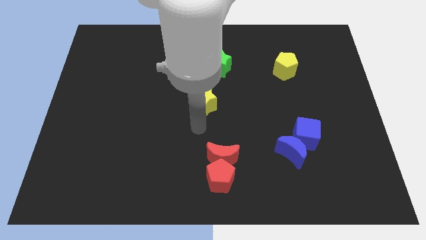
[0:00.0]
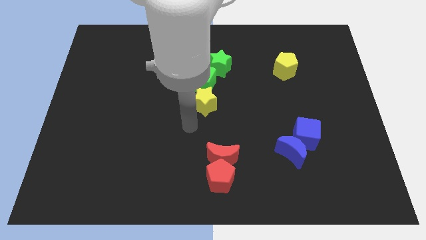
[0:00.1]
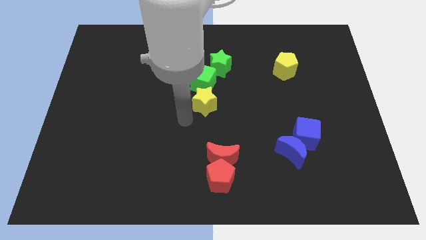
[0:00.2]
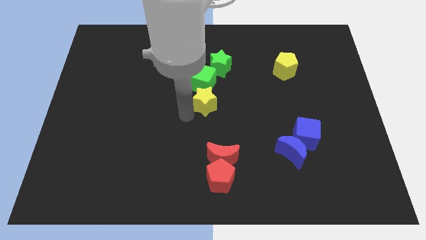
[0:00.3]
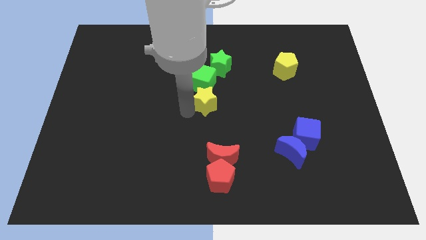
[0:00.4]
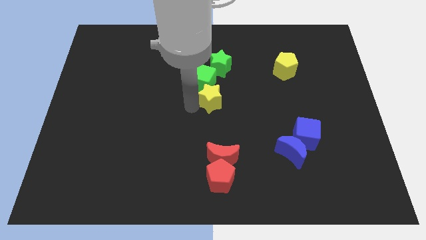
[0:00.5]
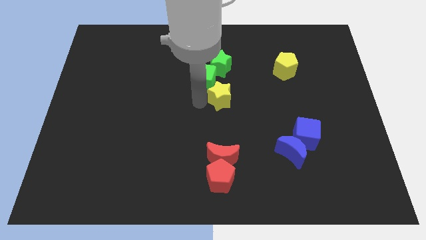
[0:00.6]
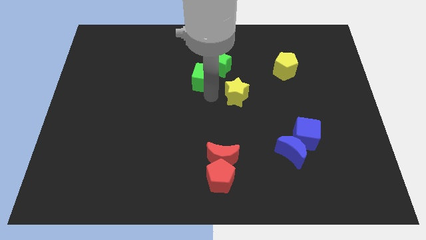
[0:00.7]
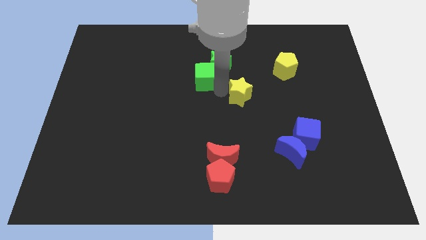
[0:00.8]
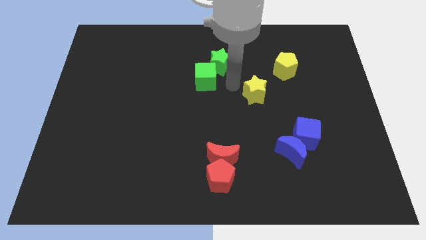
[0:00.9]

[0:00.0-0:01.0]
move the yellow star diagonally upward

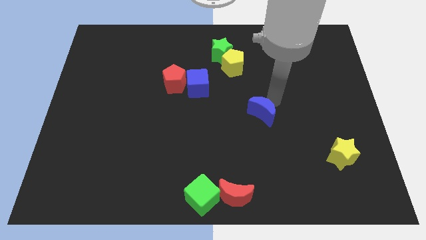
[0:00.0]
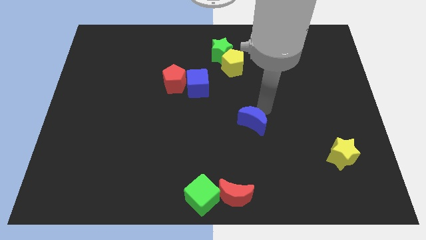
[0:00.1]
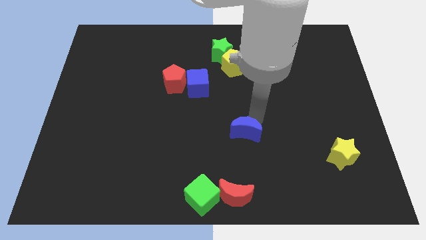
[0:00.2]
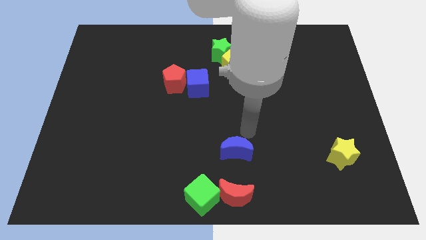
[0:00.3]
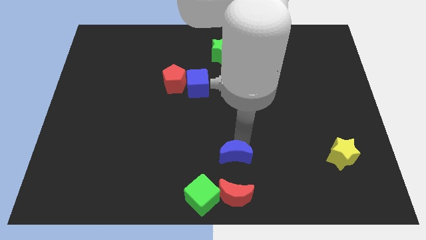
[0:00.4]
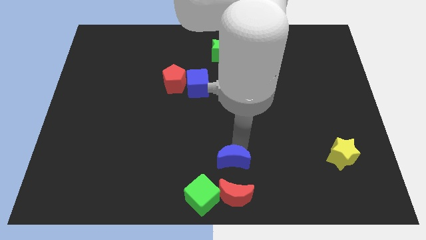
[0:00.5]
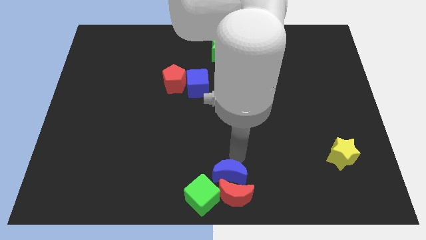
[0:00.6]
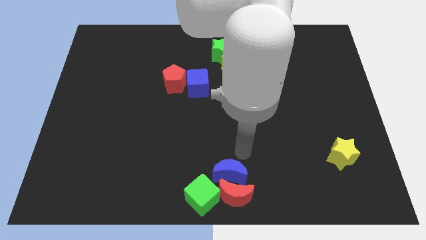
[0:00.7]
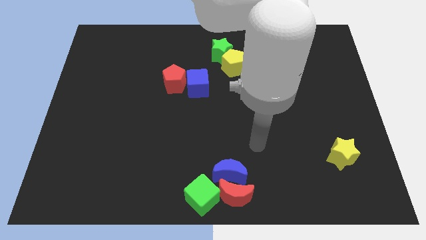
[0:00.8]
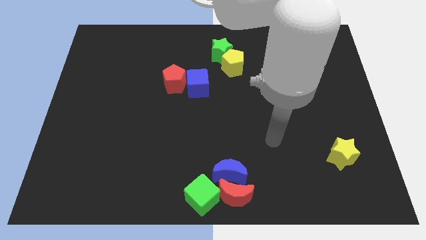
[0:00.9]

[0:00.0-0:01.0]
place the blue crescent above the red crescent

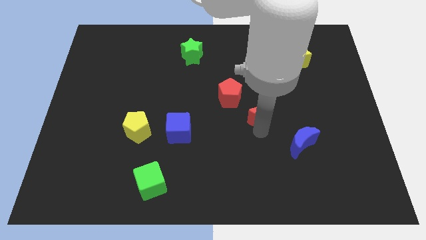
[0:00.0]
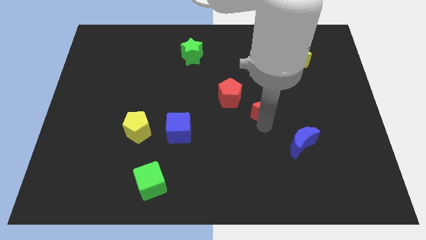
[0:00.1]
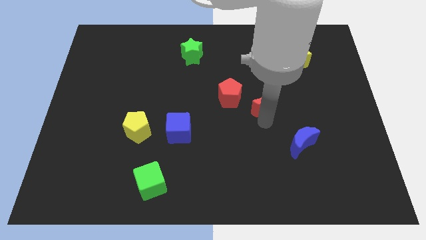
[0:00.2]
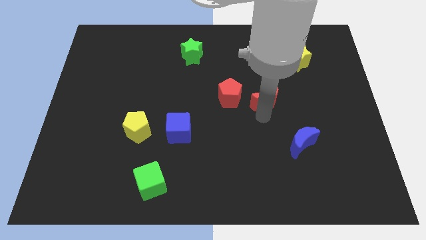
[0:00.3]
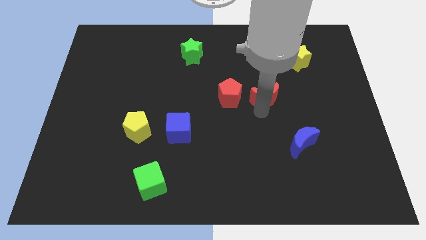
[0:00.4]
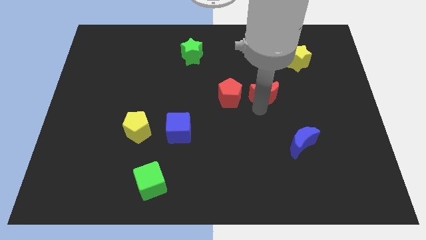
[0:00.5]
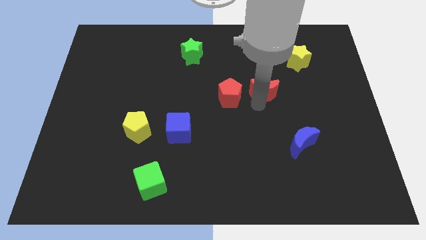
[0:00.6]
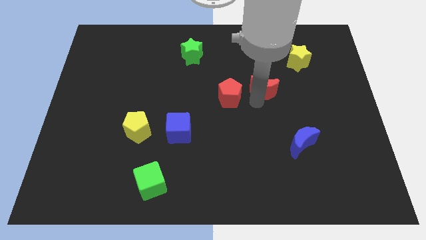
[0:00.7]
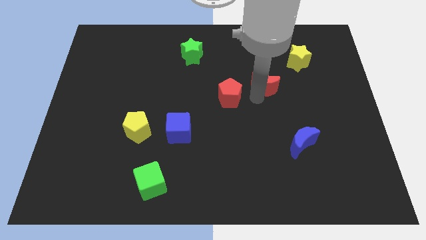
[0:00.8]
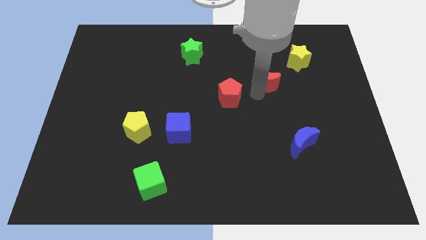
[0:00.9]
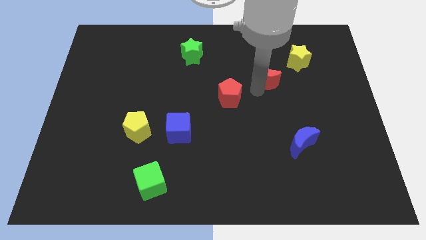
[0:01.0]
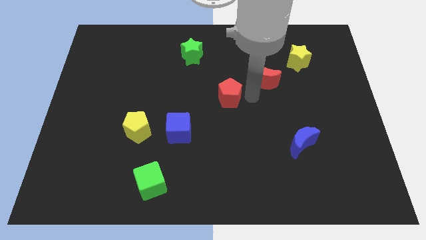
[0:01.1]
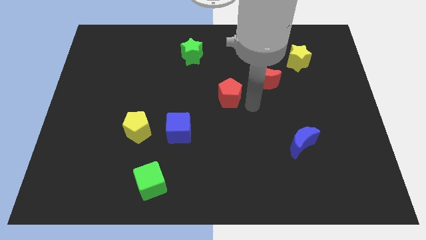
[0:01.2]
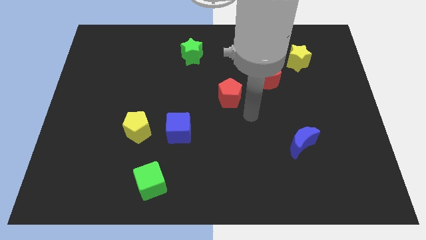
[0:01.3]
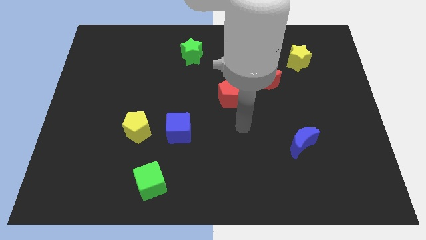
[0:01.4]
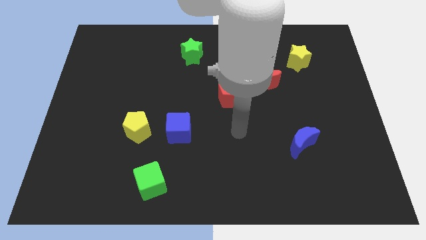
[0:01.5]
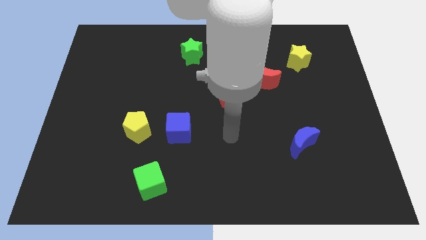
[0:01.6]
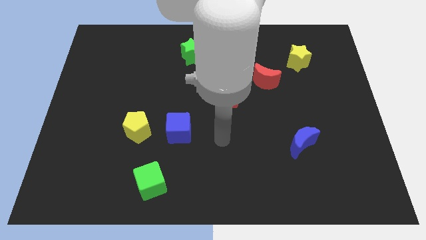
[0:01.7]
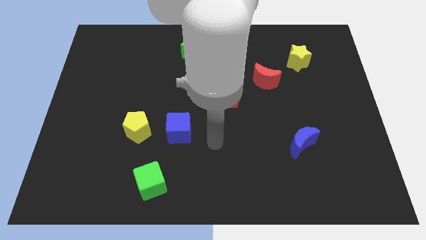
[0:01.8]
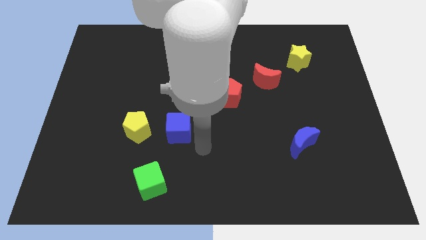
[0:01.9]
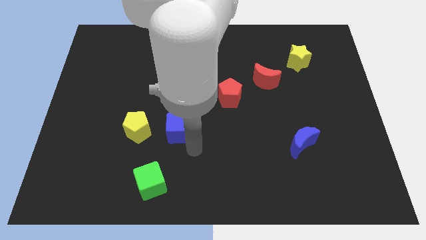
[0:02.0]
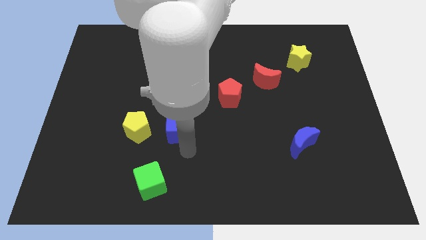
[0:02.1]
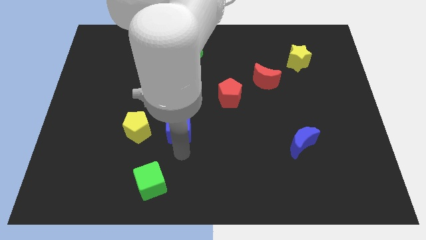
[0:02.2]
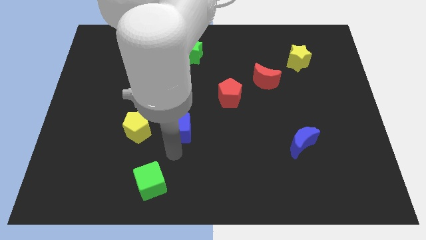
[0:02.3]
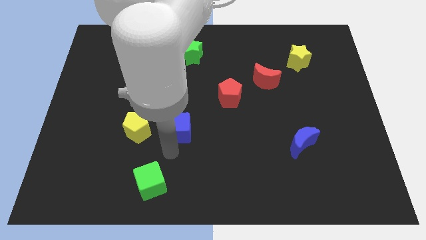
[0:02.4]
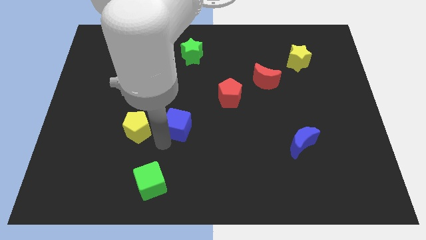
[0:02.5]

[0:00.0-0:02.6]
place the red moon in between the red pentagon and yellow star

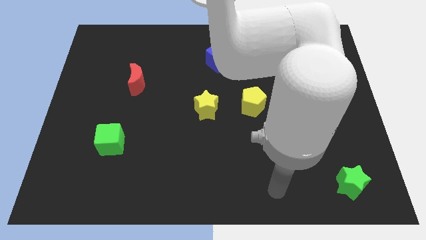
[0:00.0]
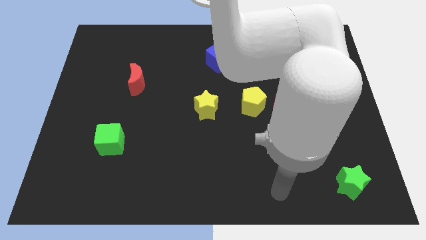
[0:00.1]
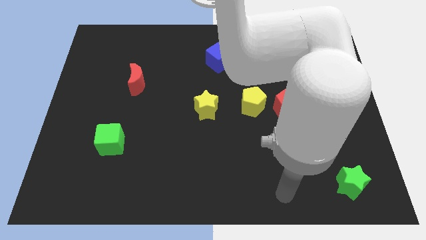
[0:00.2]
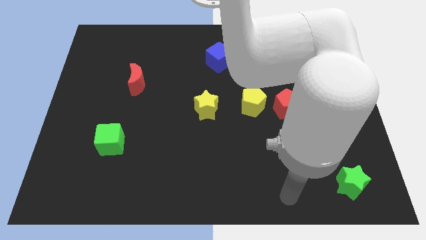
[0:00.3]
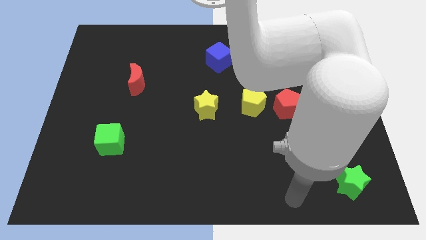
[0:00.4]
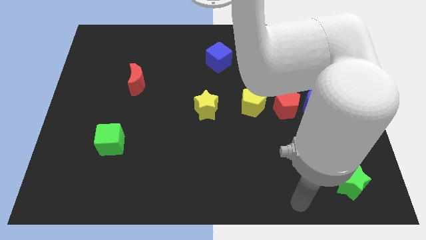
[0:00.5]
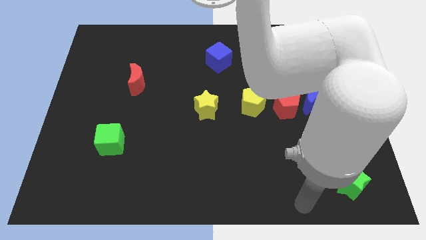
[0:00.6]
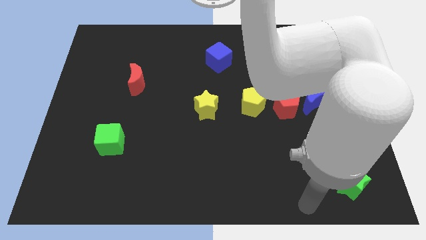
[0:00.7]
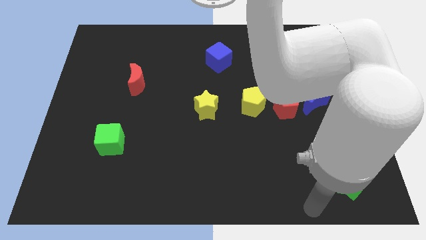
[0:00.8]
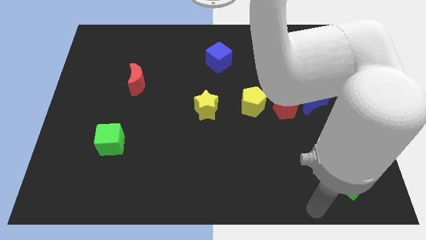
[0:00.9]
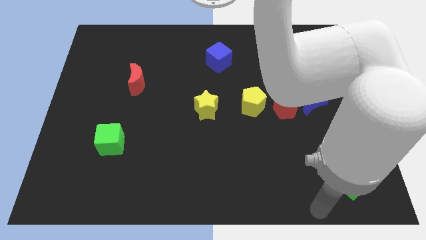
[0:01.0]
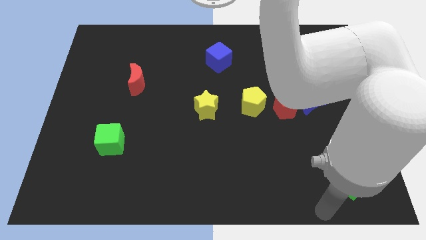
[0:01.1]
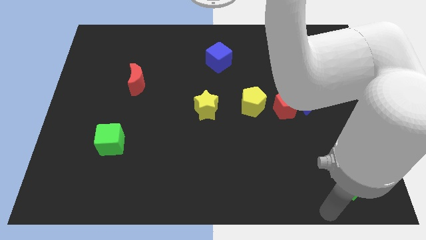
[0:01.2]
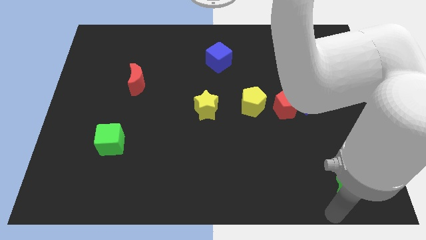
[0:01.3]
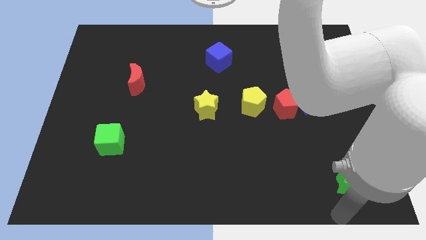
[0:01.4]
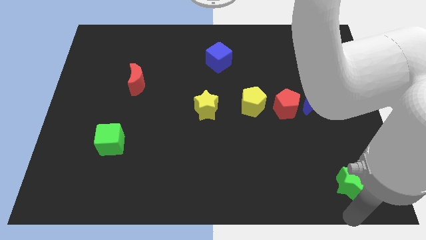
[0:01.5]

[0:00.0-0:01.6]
move the arm to the green star

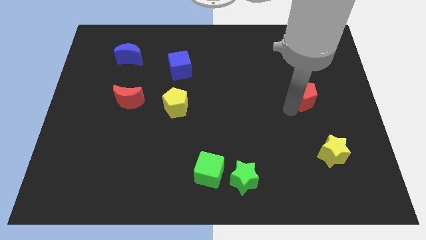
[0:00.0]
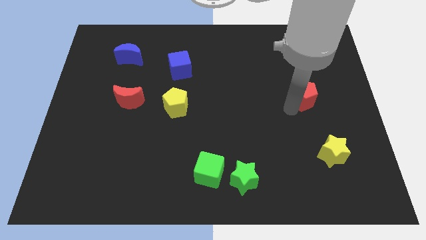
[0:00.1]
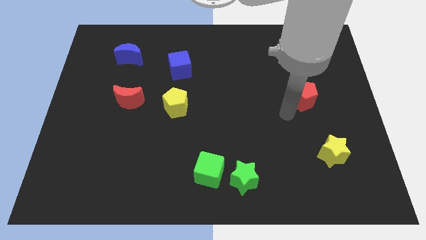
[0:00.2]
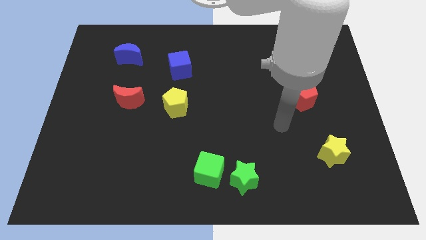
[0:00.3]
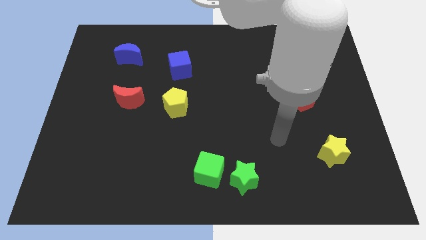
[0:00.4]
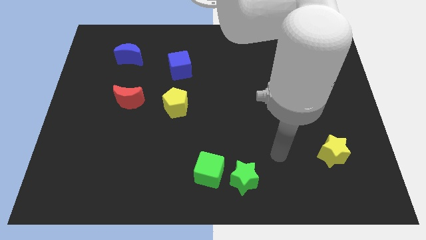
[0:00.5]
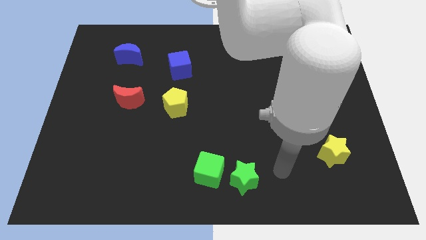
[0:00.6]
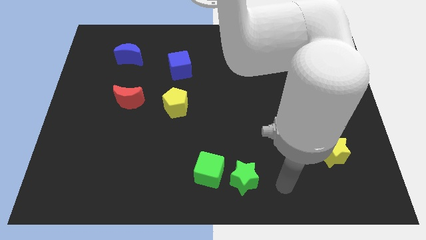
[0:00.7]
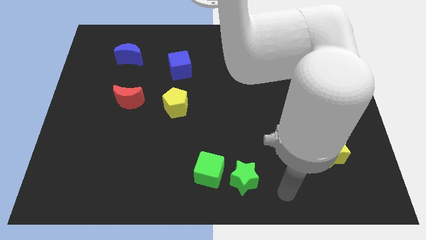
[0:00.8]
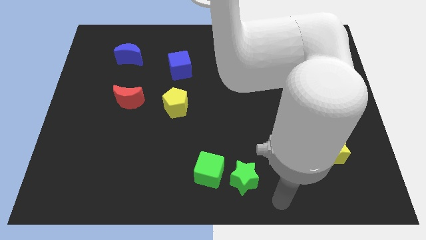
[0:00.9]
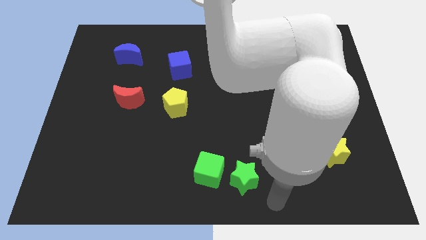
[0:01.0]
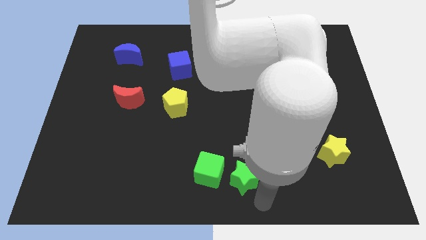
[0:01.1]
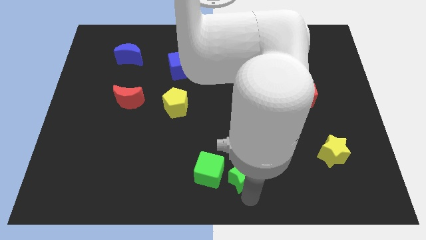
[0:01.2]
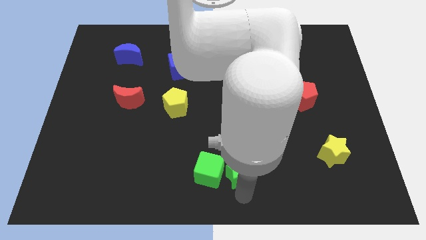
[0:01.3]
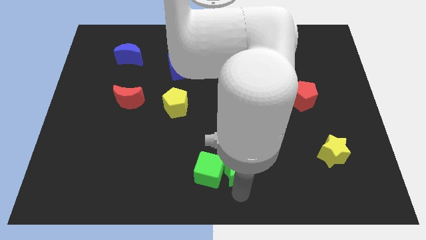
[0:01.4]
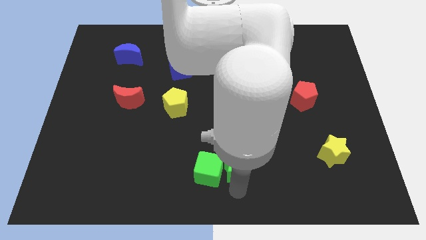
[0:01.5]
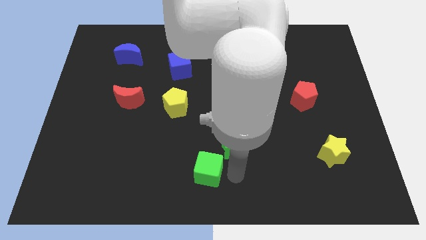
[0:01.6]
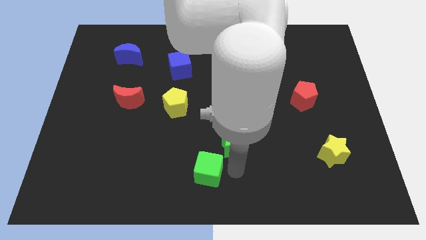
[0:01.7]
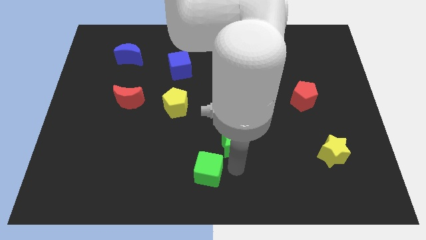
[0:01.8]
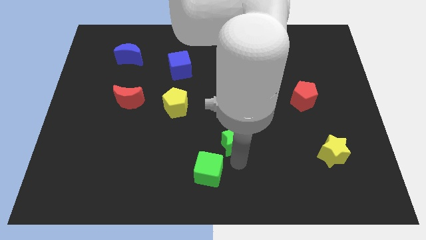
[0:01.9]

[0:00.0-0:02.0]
separate the green blocks from each other

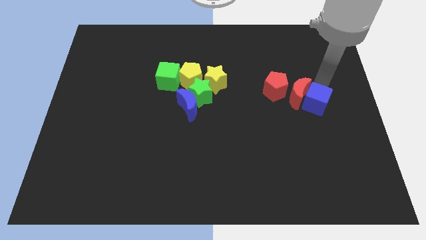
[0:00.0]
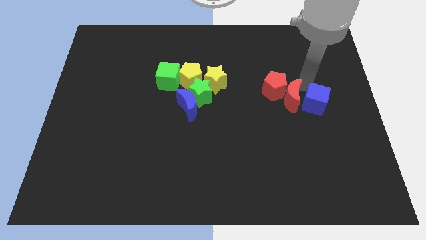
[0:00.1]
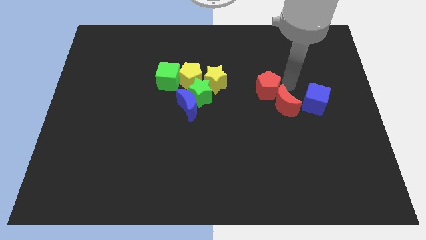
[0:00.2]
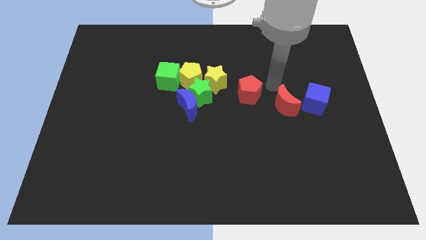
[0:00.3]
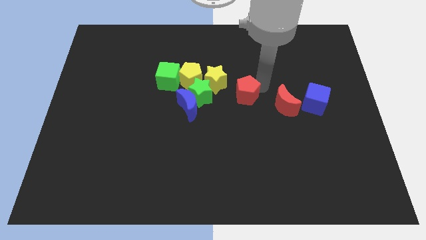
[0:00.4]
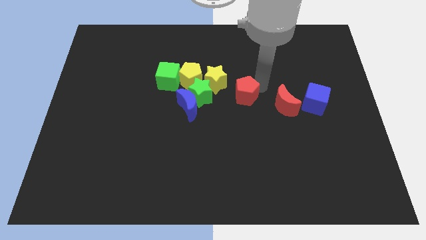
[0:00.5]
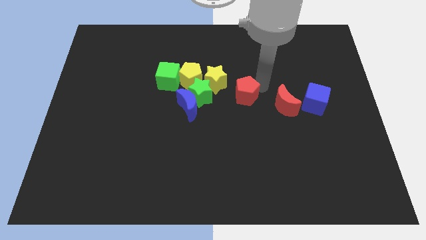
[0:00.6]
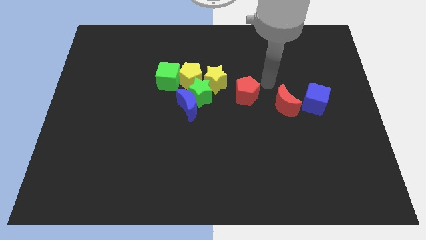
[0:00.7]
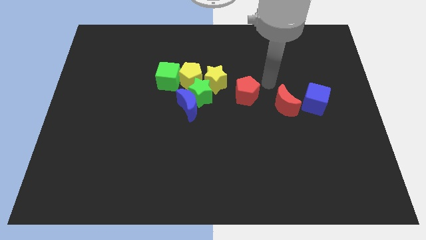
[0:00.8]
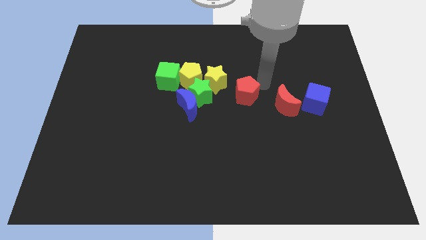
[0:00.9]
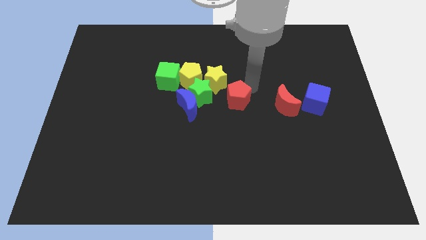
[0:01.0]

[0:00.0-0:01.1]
move the red pentagon towards the group of blocks
